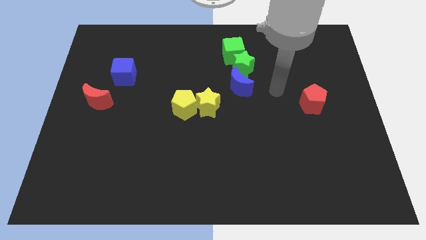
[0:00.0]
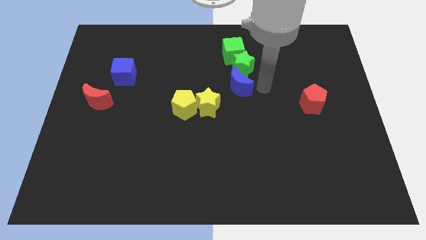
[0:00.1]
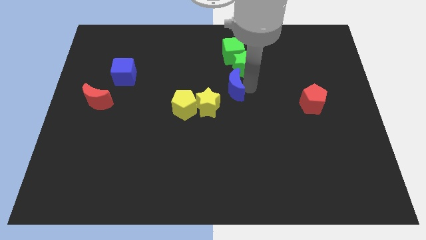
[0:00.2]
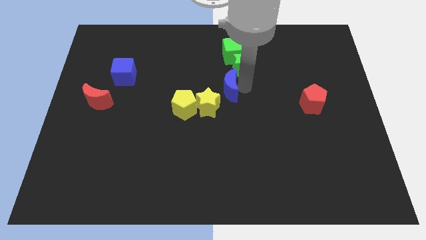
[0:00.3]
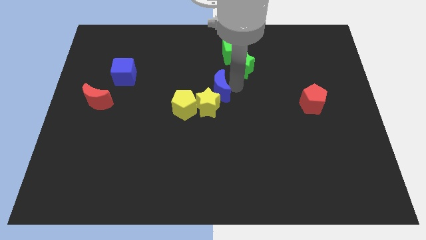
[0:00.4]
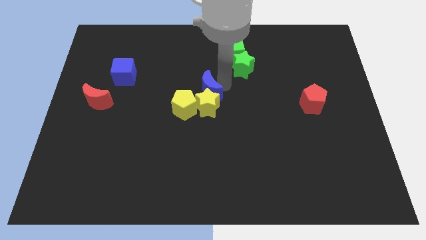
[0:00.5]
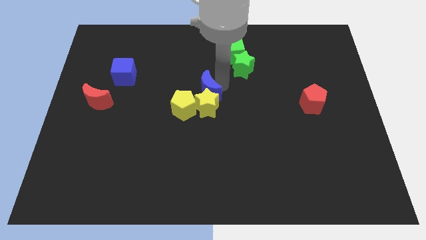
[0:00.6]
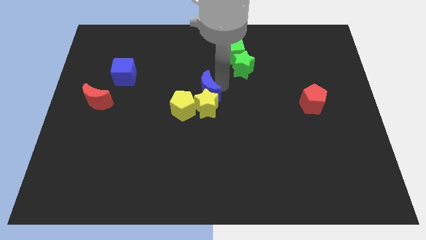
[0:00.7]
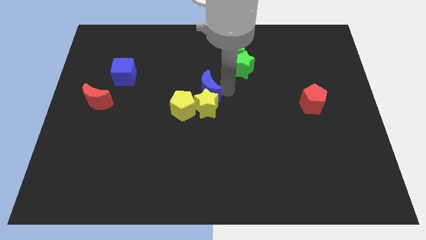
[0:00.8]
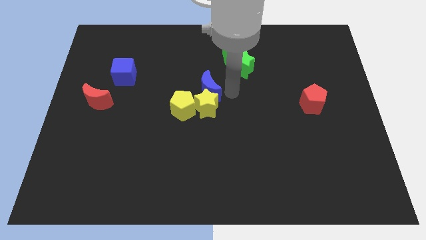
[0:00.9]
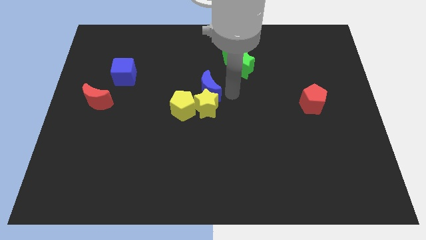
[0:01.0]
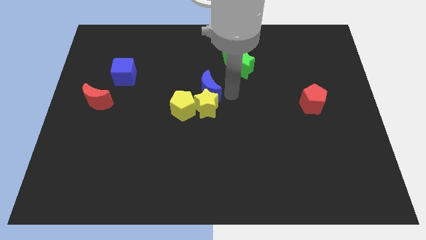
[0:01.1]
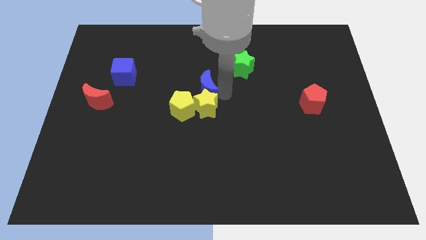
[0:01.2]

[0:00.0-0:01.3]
place the blue crescent towards the top right side of the yellow star

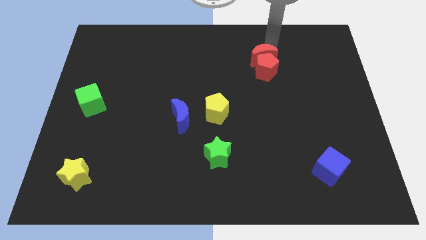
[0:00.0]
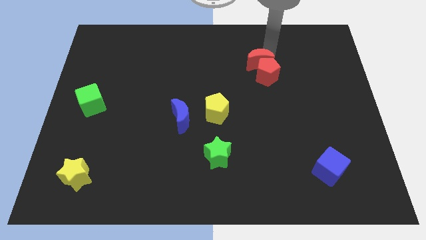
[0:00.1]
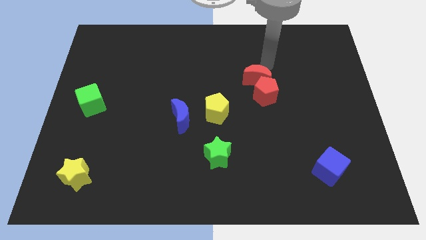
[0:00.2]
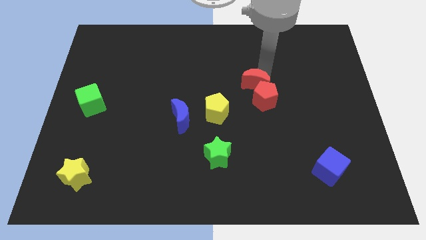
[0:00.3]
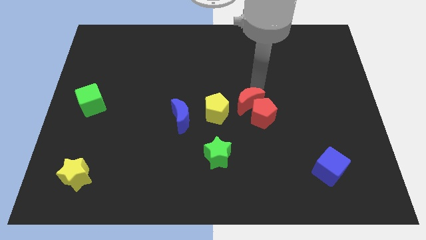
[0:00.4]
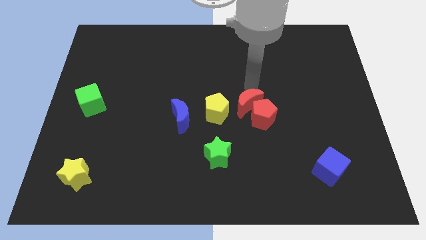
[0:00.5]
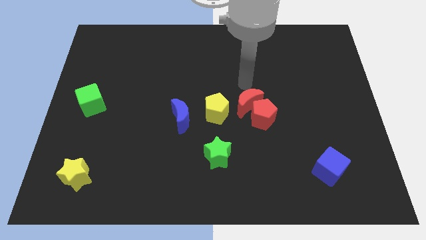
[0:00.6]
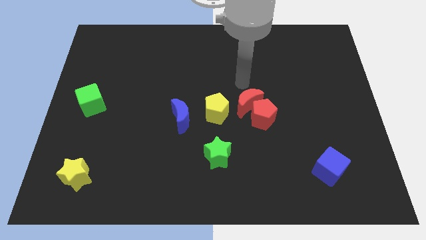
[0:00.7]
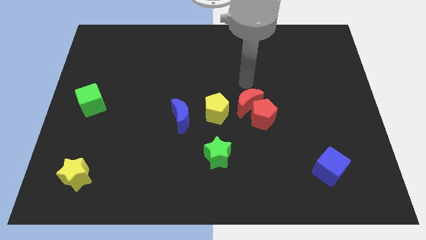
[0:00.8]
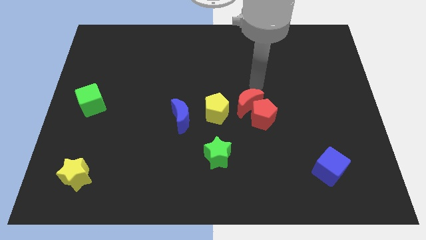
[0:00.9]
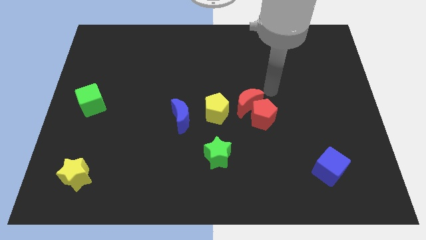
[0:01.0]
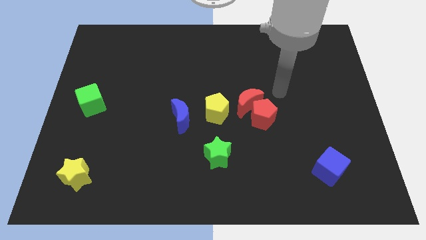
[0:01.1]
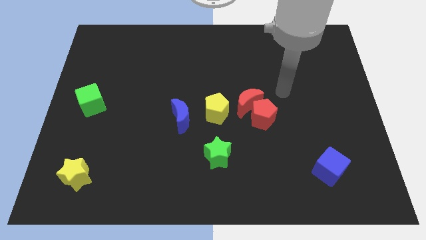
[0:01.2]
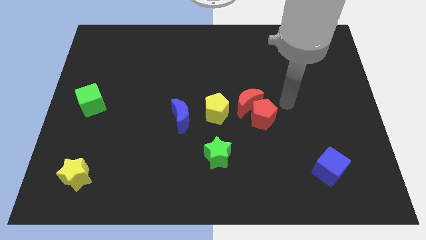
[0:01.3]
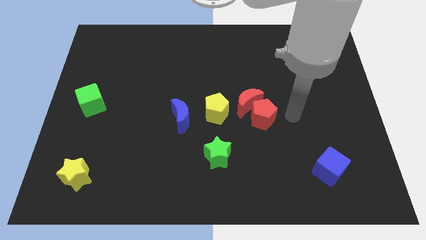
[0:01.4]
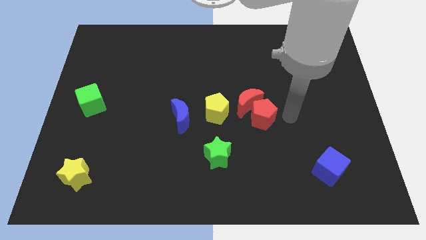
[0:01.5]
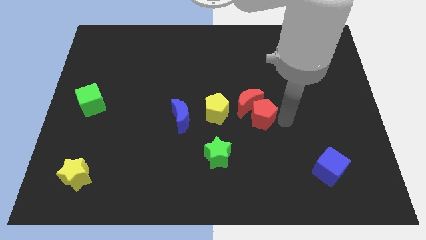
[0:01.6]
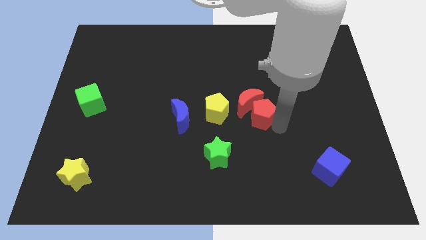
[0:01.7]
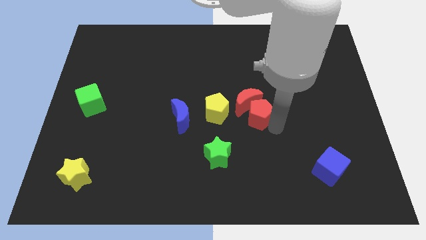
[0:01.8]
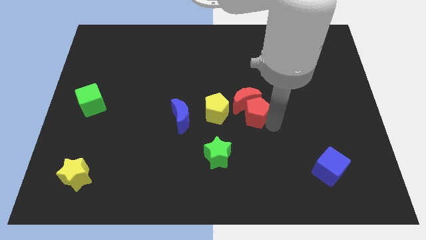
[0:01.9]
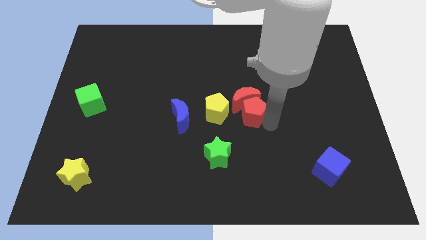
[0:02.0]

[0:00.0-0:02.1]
push the red blocks to the right of the yellow pentagon

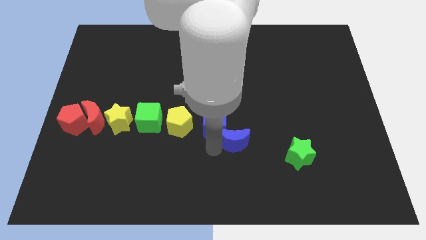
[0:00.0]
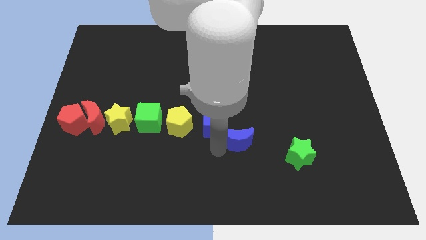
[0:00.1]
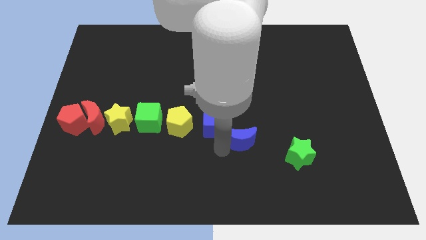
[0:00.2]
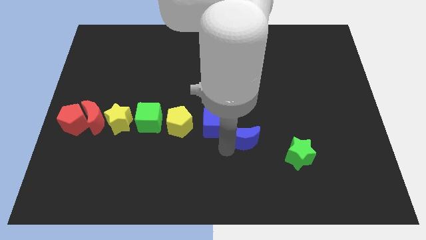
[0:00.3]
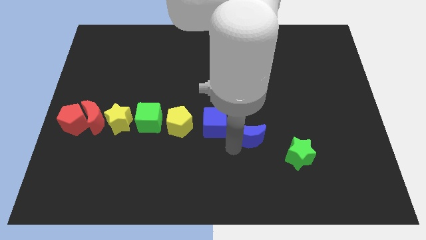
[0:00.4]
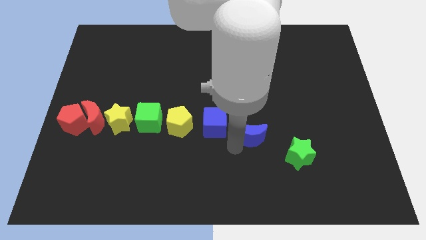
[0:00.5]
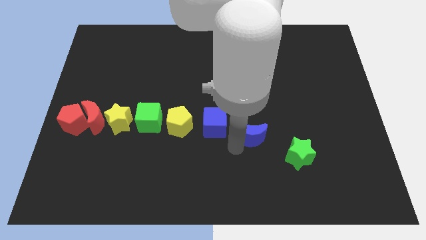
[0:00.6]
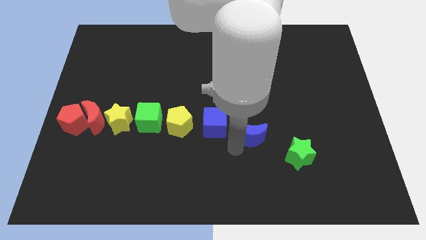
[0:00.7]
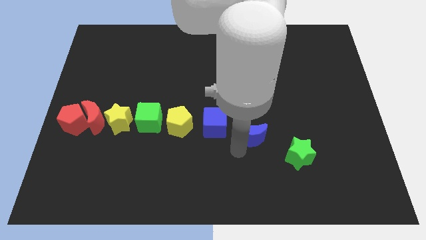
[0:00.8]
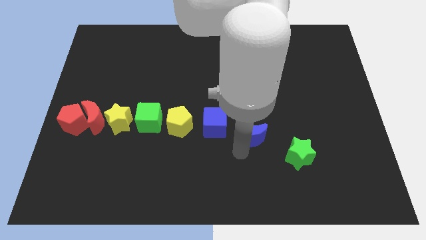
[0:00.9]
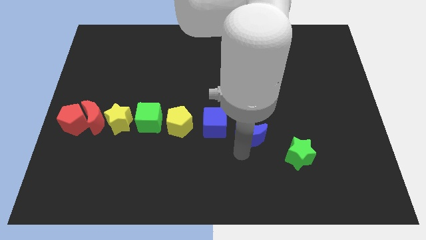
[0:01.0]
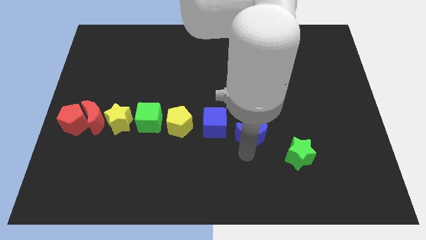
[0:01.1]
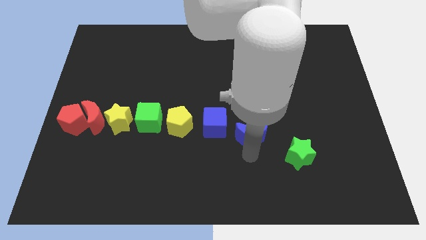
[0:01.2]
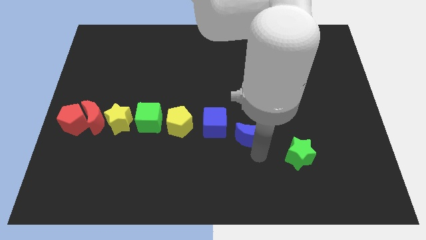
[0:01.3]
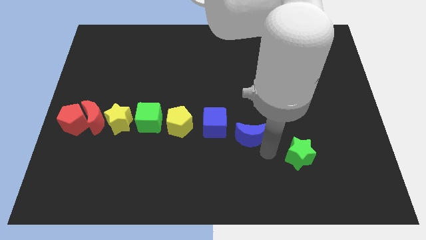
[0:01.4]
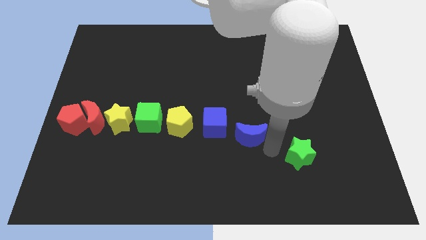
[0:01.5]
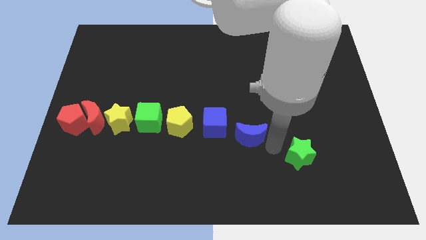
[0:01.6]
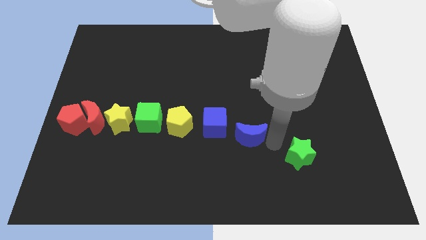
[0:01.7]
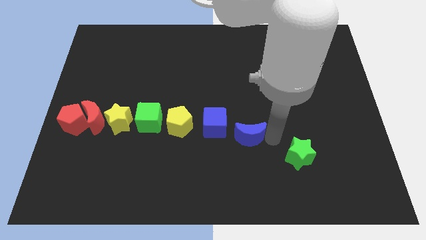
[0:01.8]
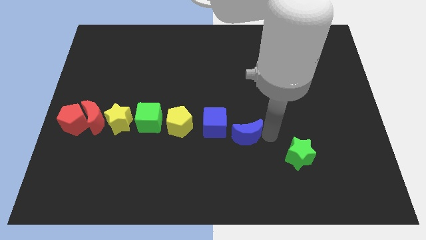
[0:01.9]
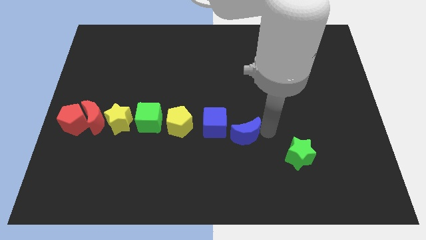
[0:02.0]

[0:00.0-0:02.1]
push the blue crescent right to the blue cube

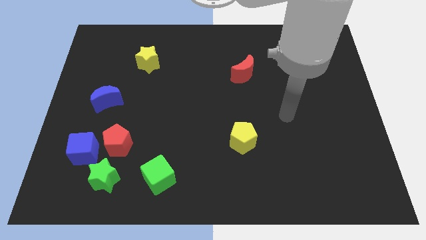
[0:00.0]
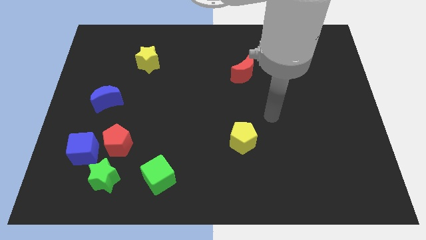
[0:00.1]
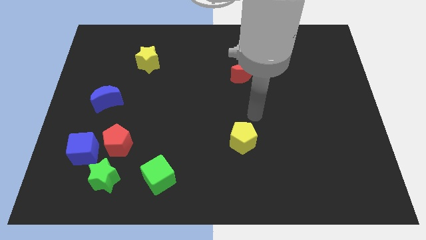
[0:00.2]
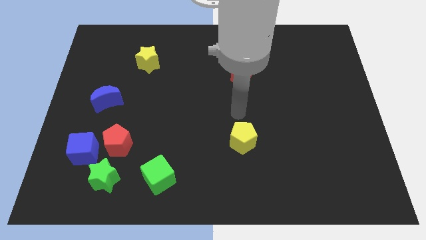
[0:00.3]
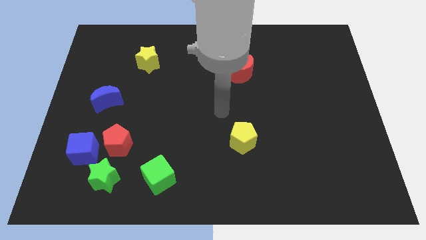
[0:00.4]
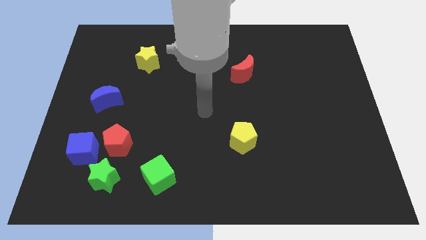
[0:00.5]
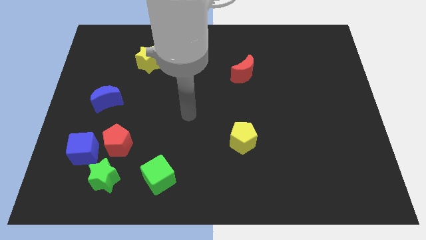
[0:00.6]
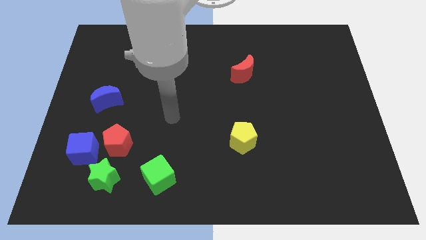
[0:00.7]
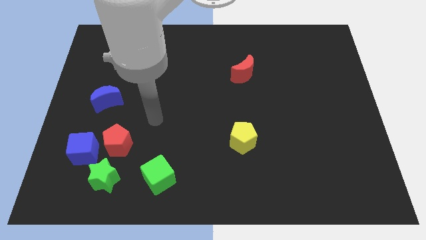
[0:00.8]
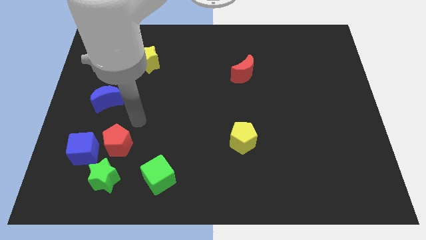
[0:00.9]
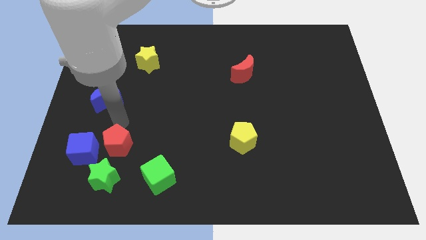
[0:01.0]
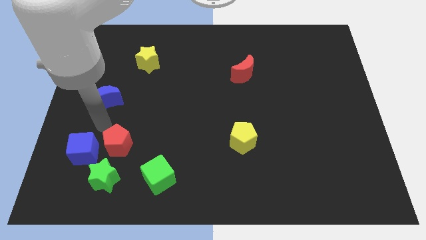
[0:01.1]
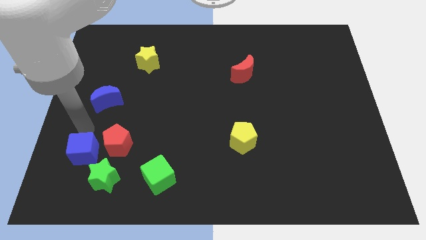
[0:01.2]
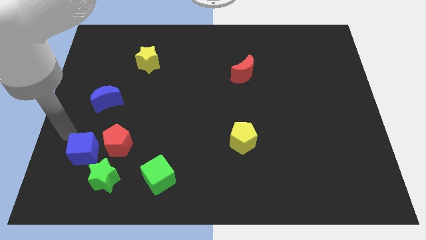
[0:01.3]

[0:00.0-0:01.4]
point arm beside blue cube

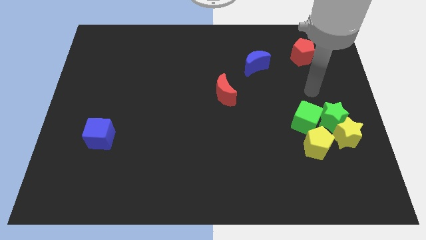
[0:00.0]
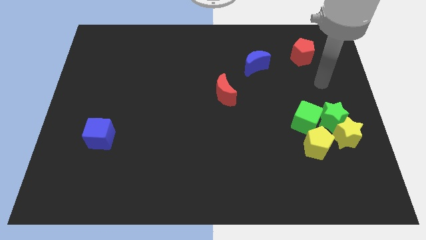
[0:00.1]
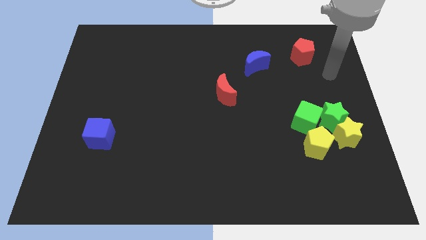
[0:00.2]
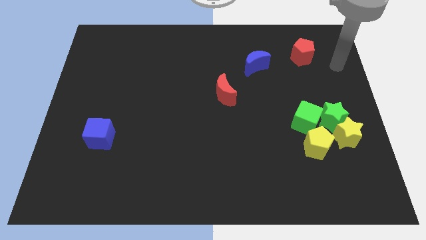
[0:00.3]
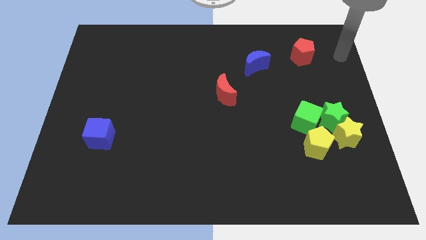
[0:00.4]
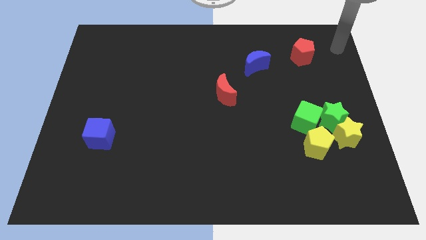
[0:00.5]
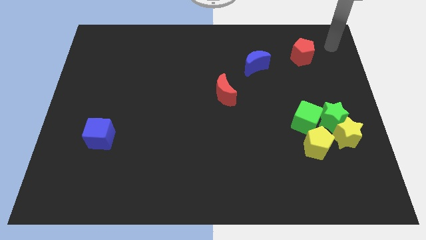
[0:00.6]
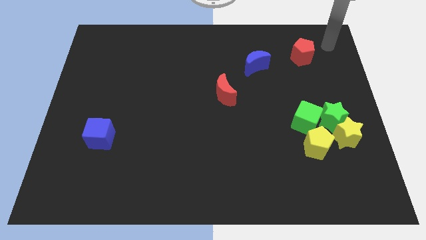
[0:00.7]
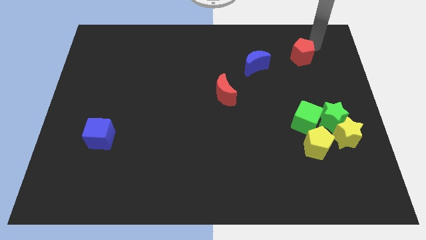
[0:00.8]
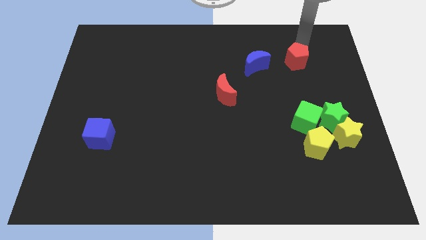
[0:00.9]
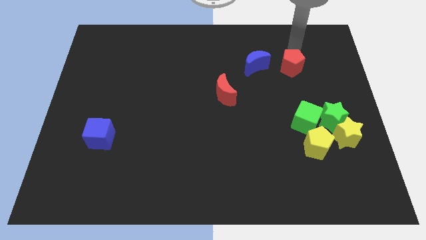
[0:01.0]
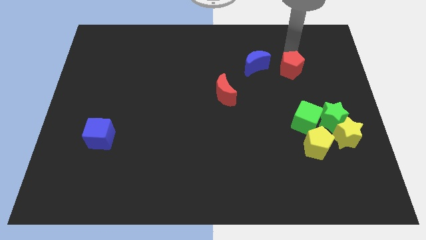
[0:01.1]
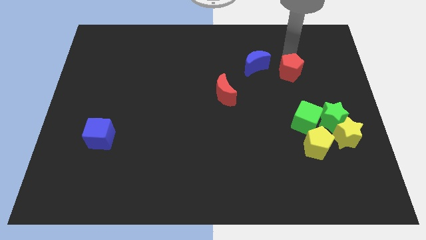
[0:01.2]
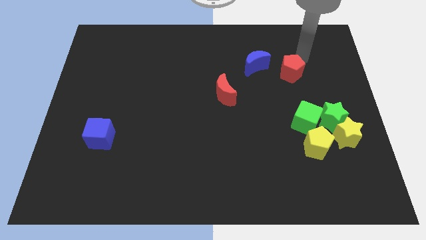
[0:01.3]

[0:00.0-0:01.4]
push the red pentagon horizontally at the right side of the blue crescent

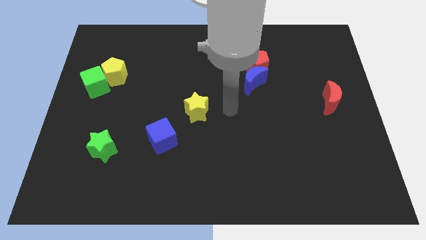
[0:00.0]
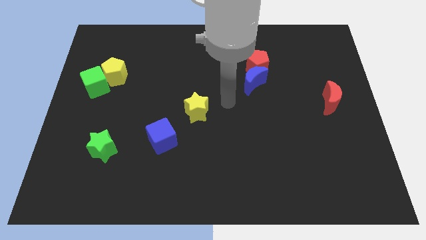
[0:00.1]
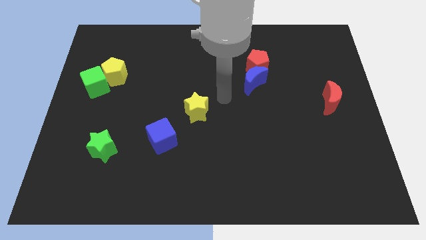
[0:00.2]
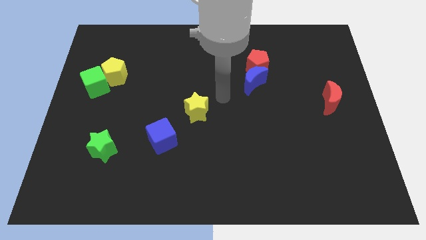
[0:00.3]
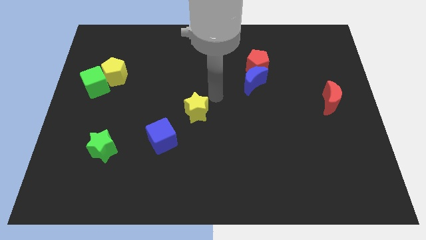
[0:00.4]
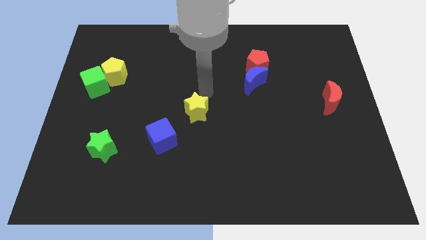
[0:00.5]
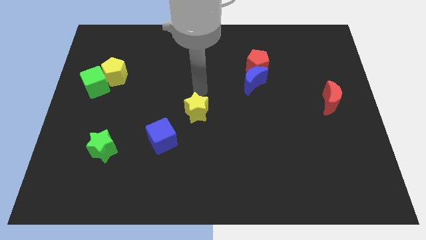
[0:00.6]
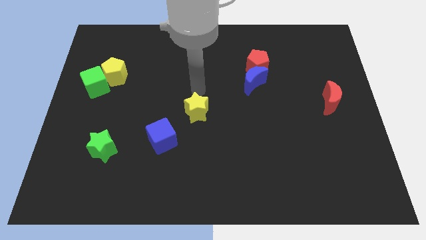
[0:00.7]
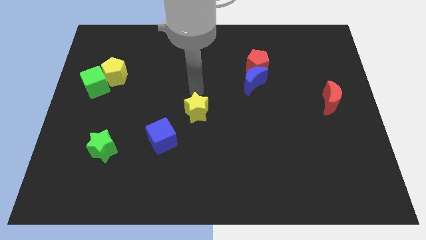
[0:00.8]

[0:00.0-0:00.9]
put your arm at the top of yellow star
